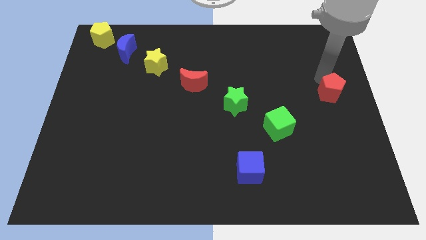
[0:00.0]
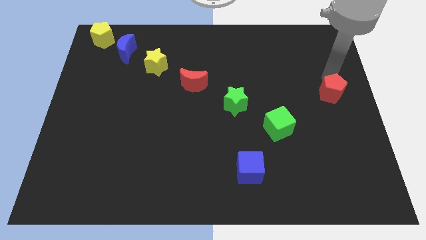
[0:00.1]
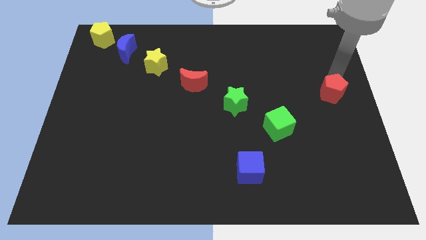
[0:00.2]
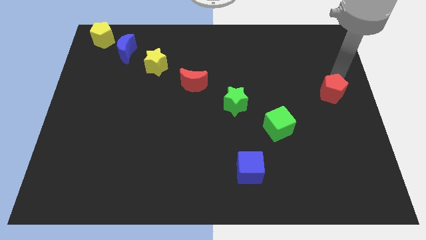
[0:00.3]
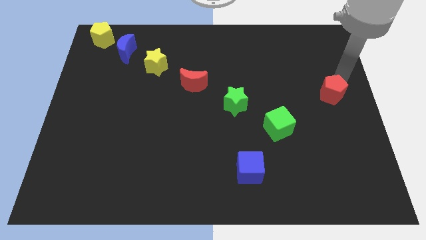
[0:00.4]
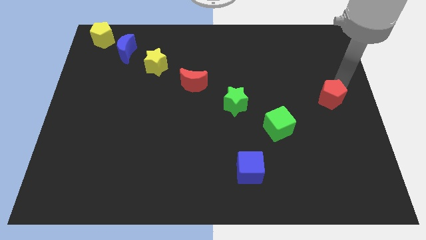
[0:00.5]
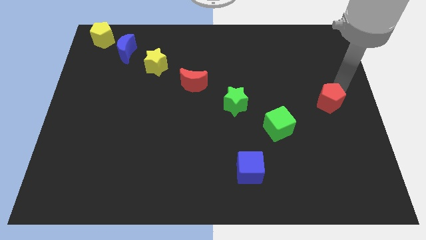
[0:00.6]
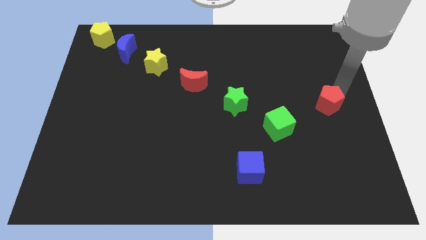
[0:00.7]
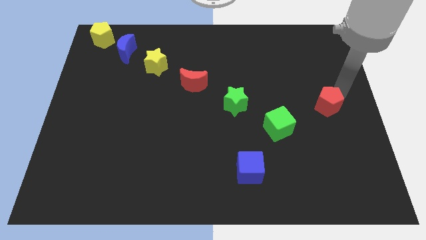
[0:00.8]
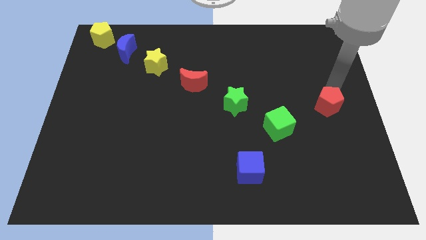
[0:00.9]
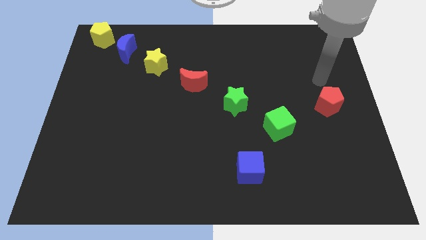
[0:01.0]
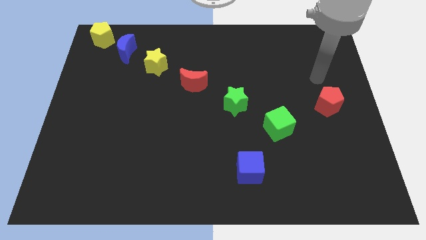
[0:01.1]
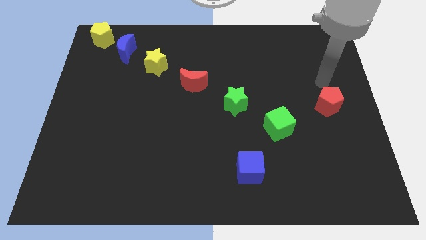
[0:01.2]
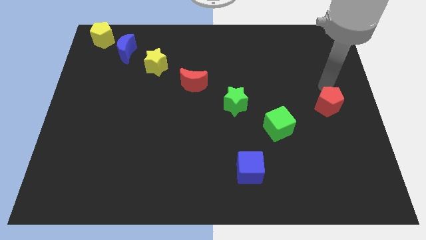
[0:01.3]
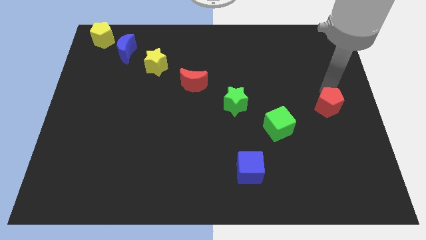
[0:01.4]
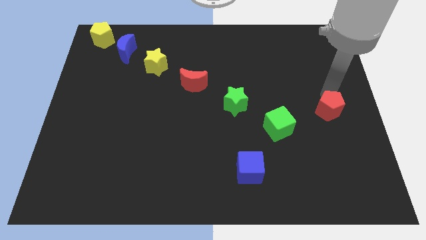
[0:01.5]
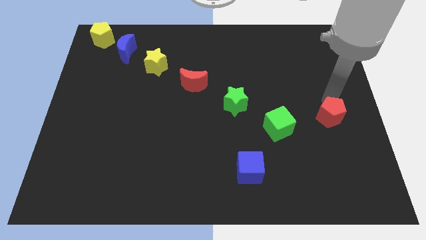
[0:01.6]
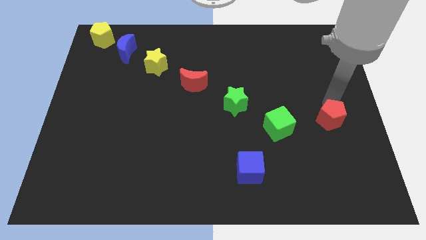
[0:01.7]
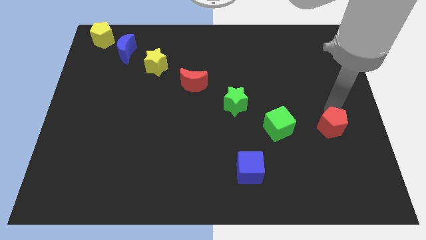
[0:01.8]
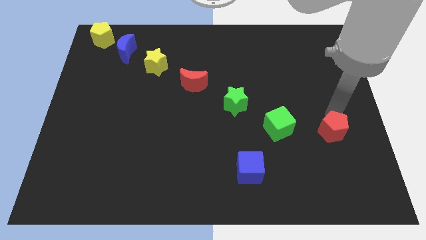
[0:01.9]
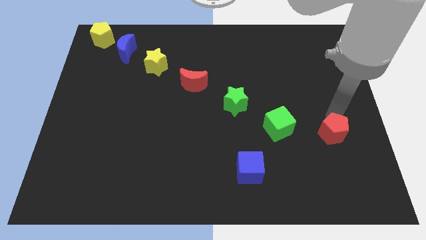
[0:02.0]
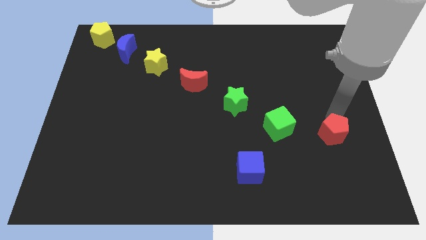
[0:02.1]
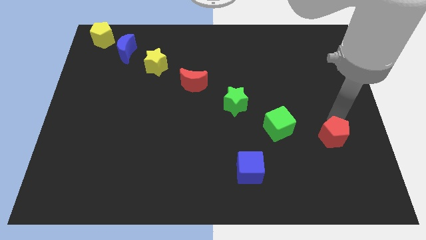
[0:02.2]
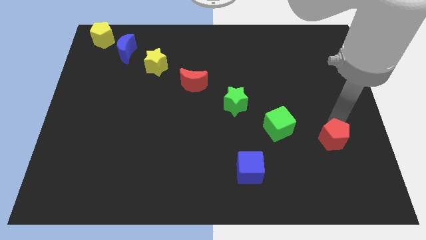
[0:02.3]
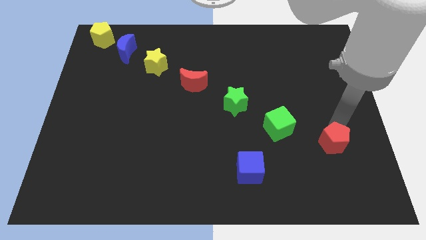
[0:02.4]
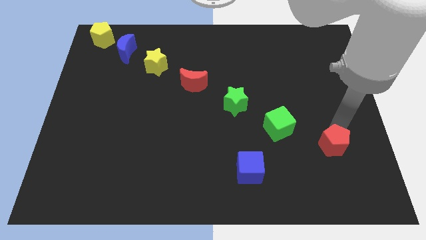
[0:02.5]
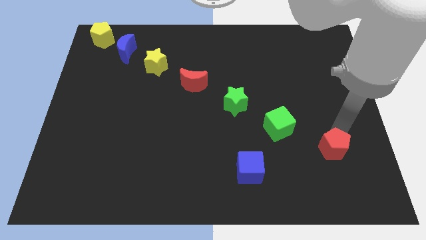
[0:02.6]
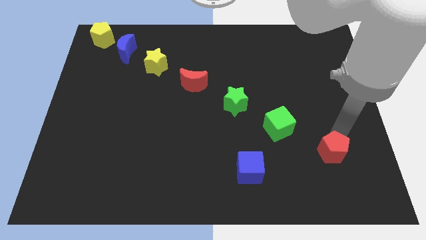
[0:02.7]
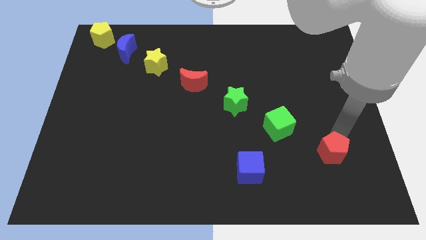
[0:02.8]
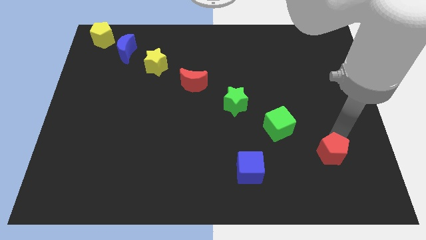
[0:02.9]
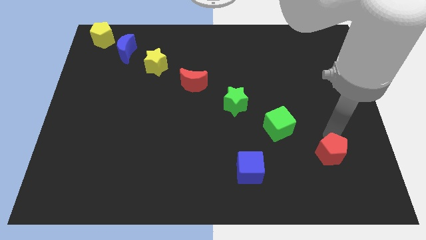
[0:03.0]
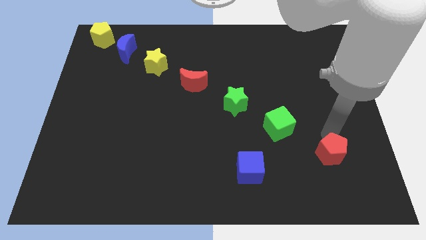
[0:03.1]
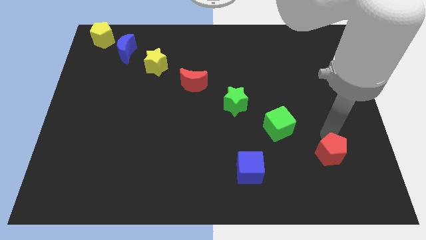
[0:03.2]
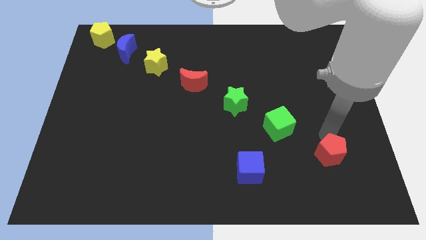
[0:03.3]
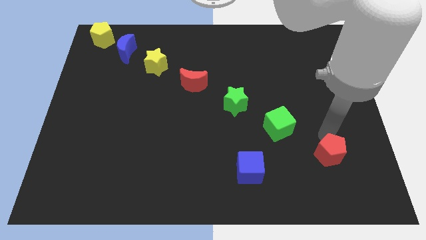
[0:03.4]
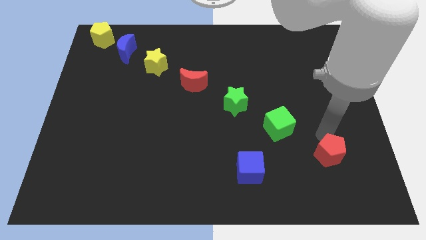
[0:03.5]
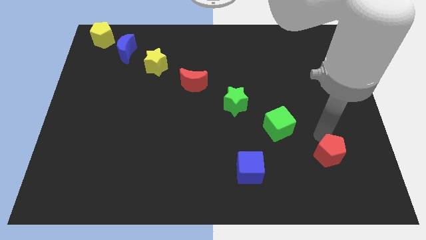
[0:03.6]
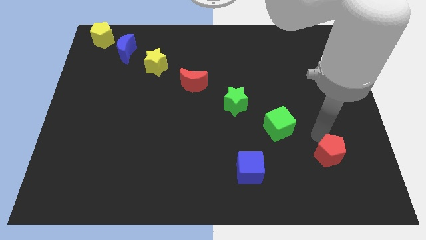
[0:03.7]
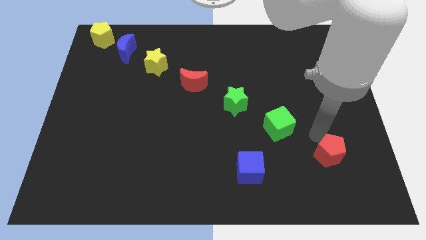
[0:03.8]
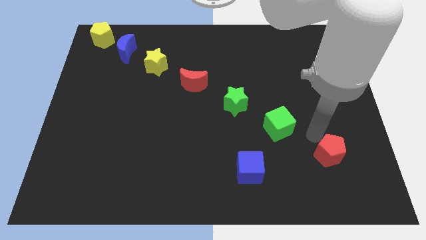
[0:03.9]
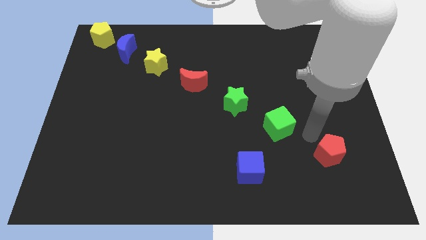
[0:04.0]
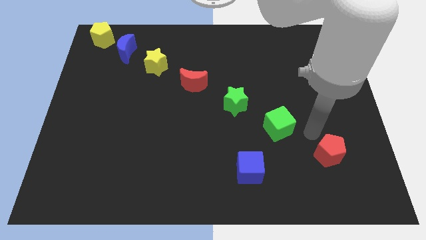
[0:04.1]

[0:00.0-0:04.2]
place the red pentagon diagonal to the green cube

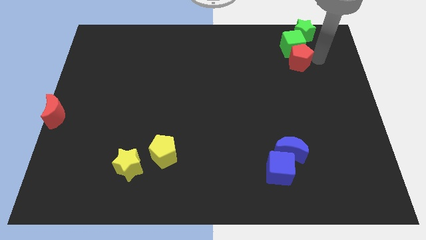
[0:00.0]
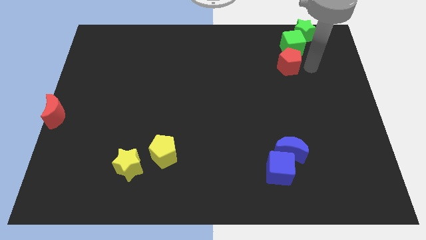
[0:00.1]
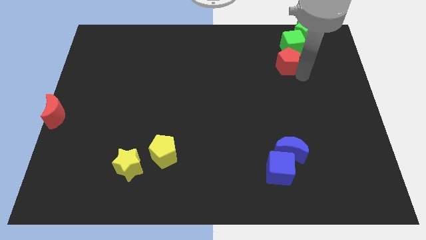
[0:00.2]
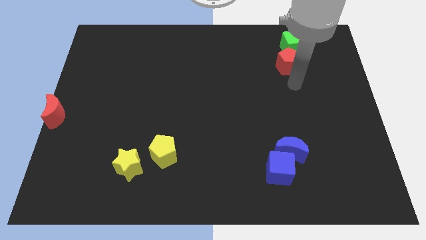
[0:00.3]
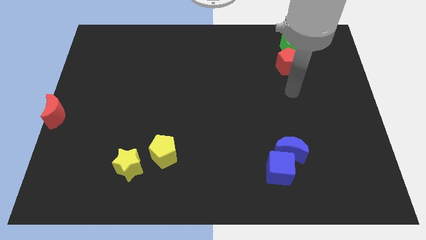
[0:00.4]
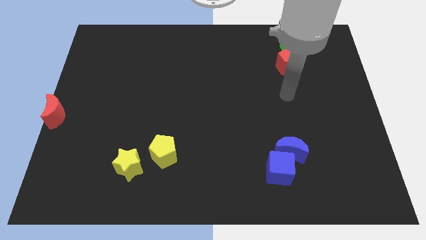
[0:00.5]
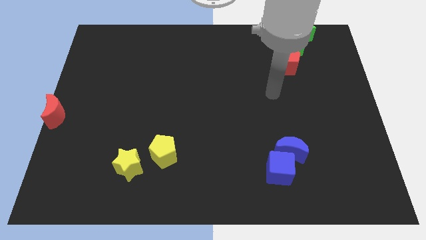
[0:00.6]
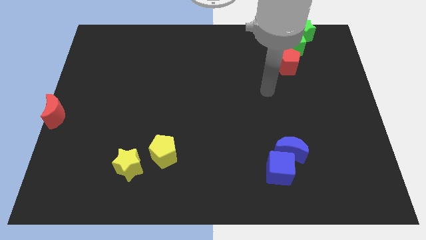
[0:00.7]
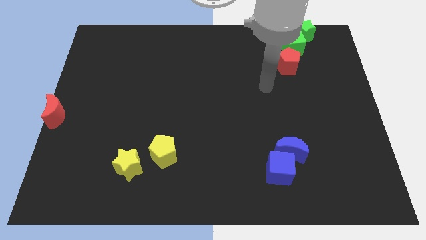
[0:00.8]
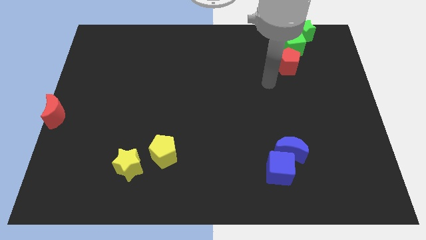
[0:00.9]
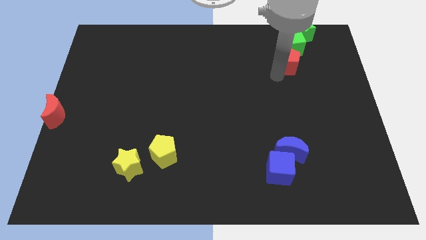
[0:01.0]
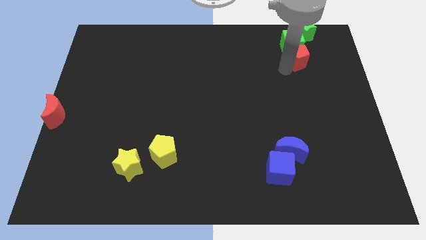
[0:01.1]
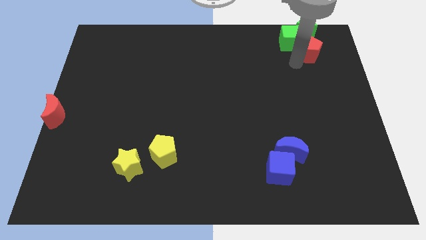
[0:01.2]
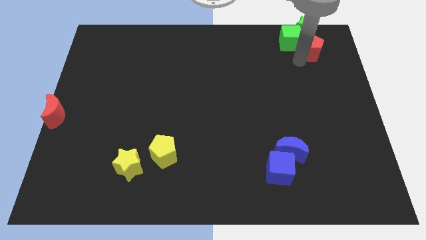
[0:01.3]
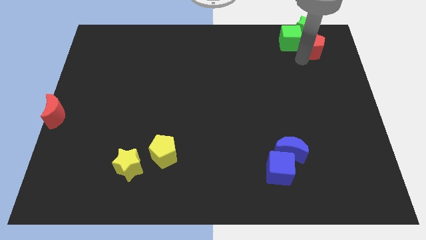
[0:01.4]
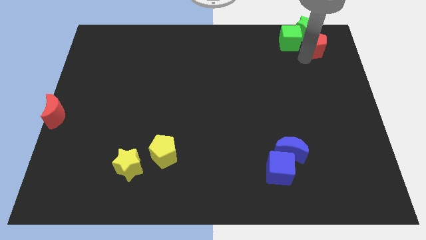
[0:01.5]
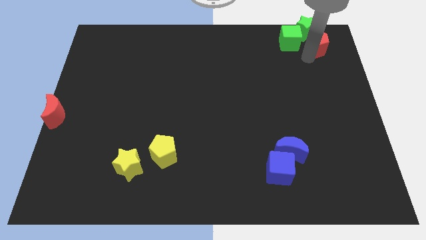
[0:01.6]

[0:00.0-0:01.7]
move red pentagon to the right of green cube

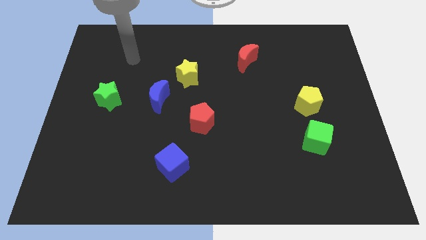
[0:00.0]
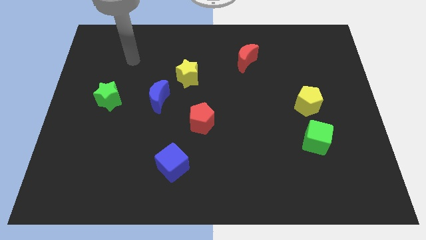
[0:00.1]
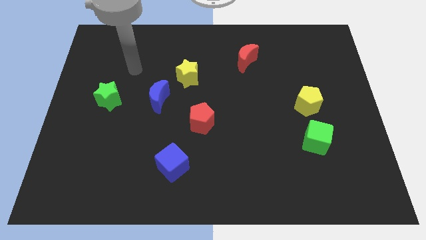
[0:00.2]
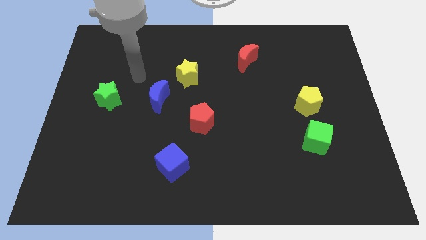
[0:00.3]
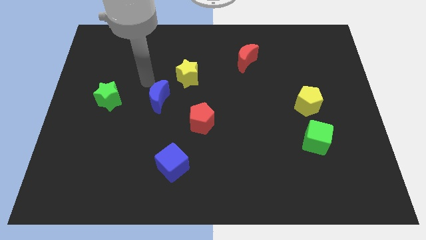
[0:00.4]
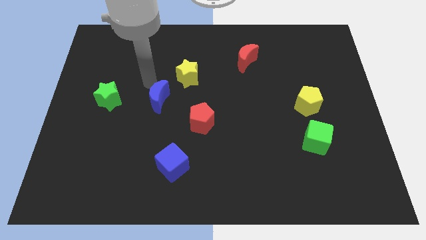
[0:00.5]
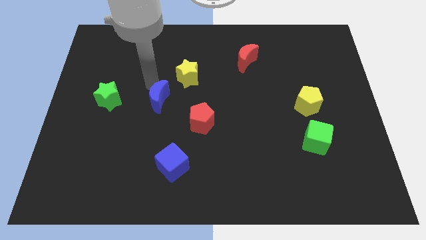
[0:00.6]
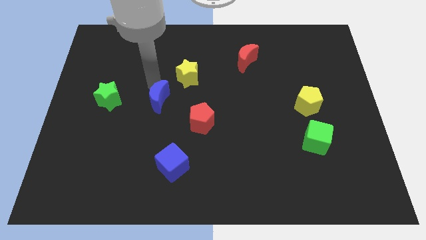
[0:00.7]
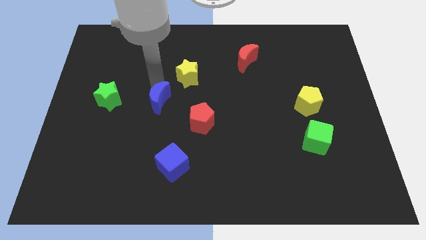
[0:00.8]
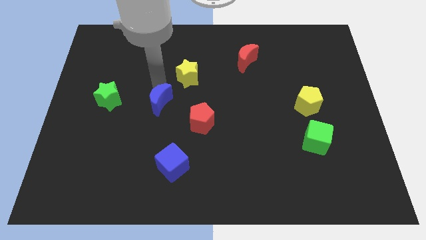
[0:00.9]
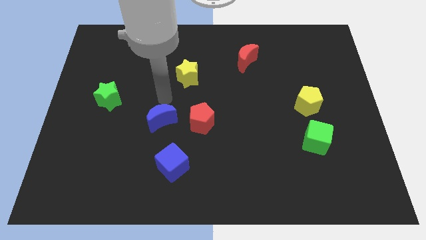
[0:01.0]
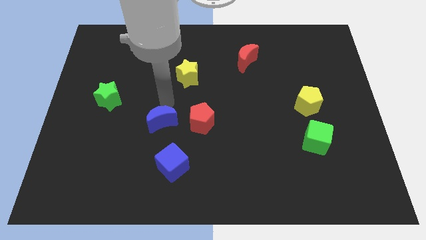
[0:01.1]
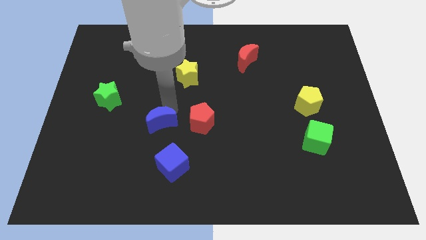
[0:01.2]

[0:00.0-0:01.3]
move your arm parallel left of the red pentagon

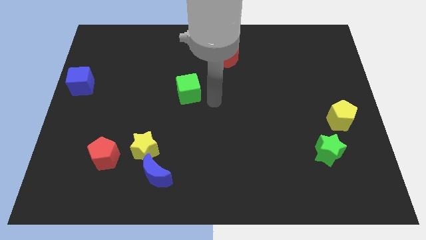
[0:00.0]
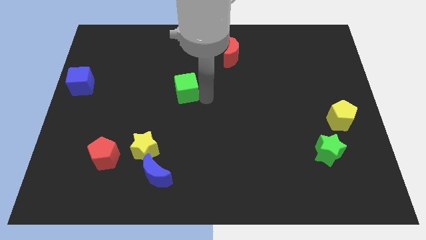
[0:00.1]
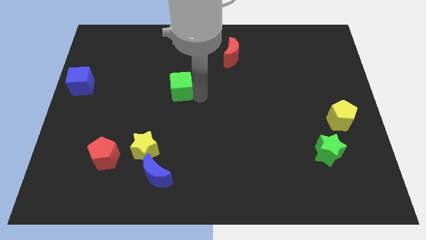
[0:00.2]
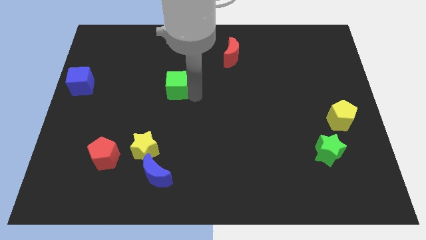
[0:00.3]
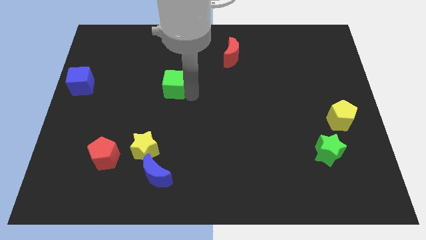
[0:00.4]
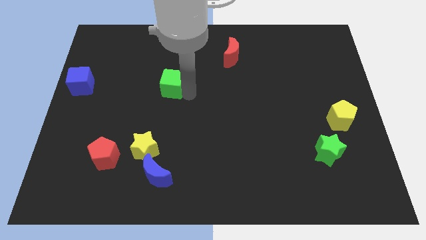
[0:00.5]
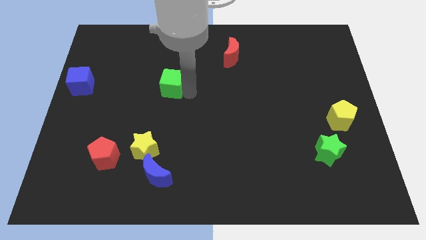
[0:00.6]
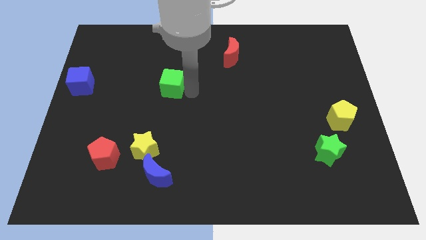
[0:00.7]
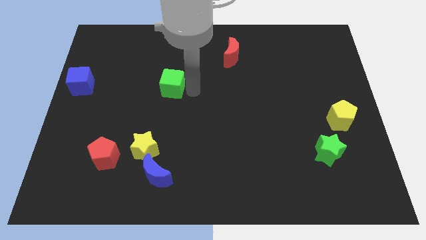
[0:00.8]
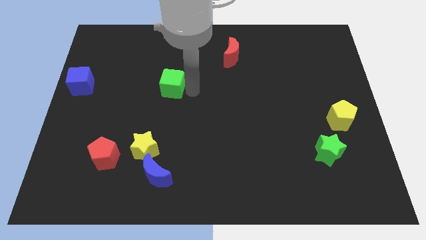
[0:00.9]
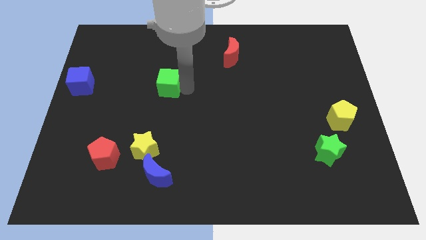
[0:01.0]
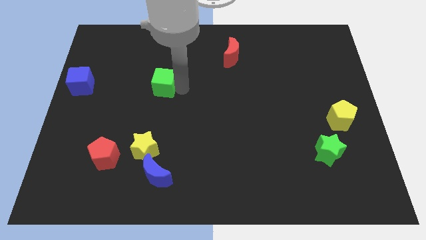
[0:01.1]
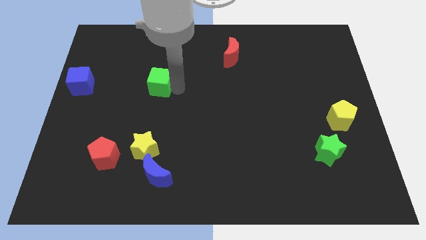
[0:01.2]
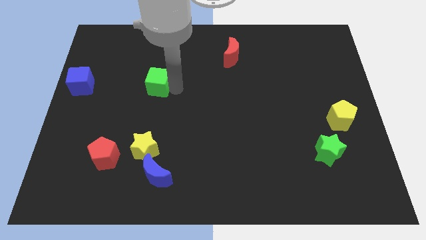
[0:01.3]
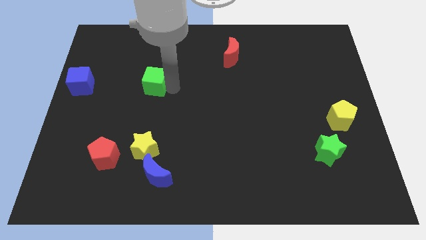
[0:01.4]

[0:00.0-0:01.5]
move the green cube parallel to the blue cube

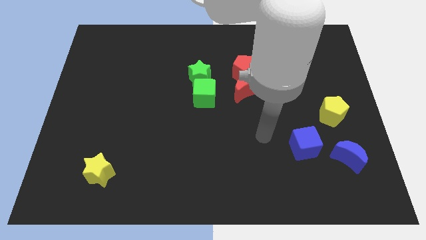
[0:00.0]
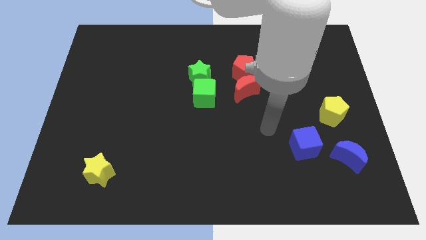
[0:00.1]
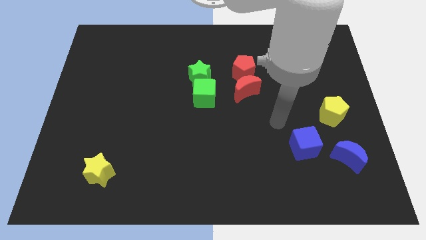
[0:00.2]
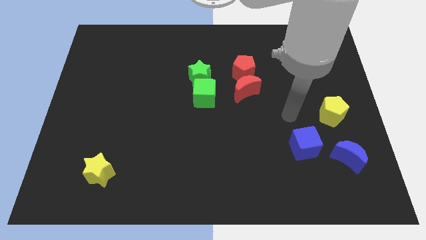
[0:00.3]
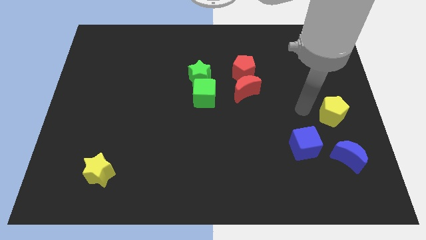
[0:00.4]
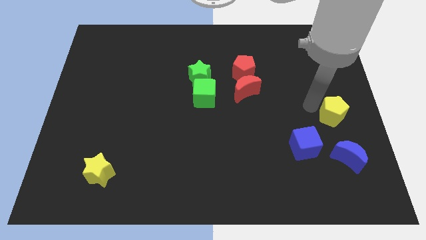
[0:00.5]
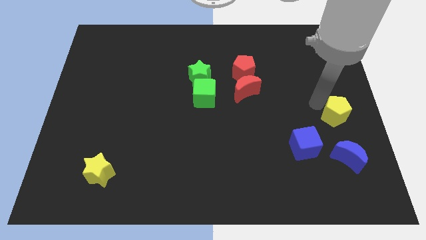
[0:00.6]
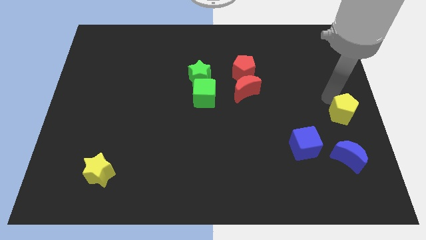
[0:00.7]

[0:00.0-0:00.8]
tap the yellow pentagon
